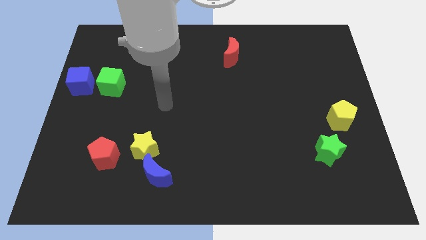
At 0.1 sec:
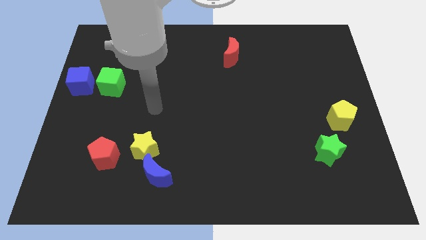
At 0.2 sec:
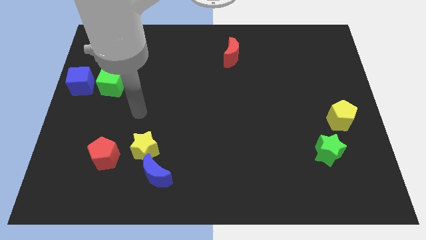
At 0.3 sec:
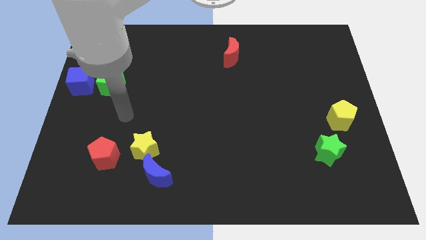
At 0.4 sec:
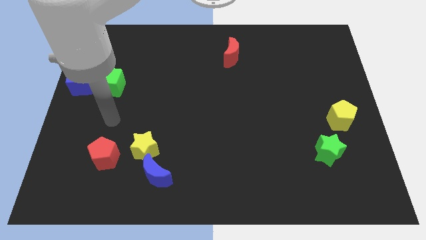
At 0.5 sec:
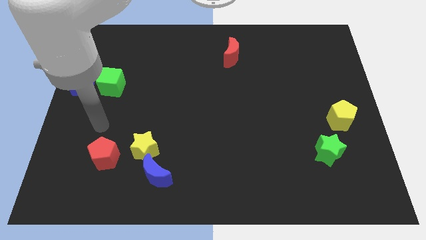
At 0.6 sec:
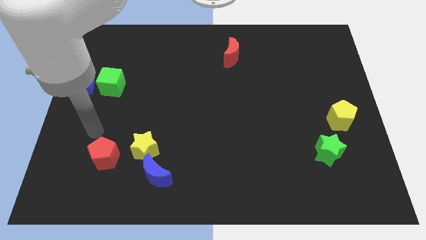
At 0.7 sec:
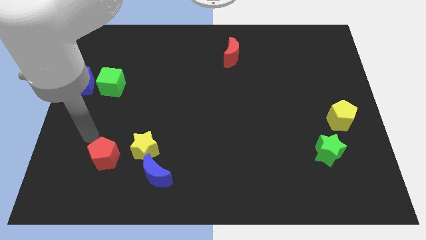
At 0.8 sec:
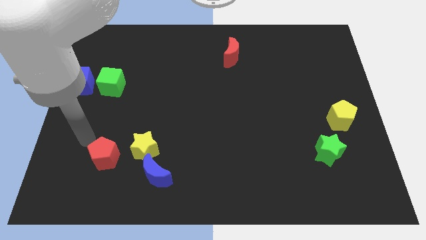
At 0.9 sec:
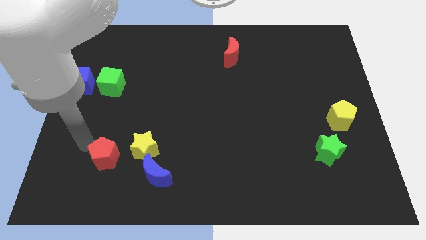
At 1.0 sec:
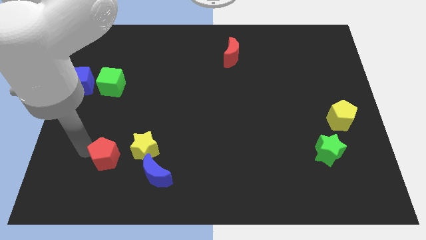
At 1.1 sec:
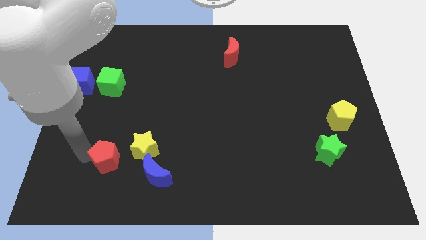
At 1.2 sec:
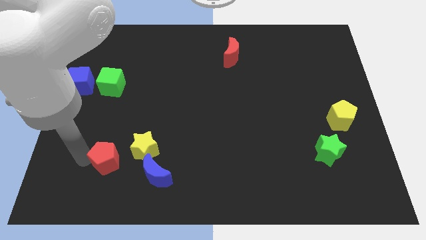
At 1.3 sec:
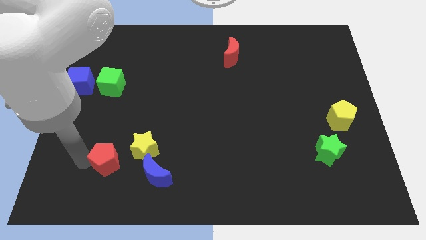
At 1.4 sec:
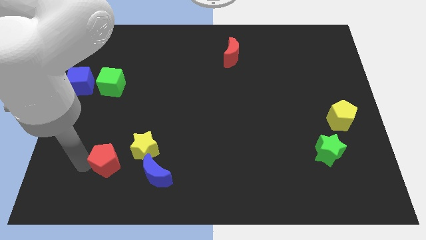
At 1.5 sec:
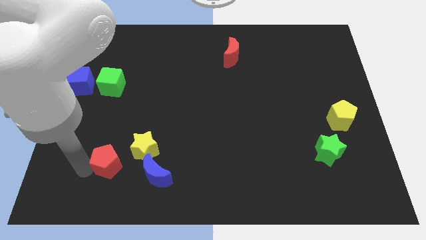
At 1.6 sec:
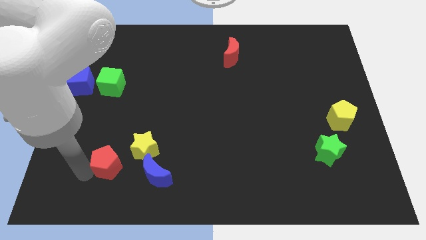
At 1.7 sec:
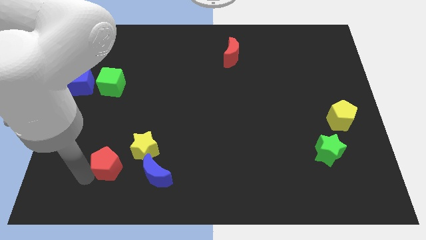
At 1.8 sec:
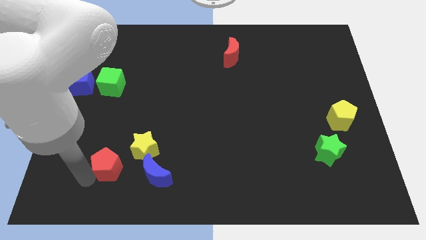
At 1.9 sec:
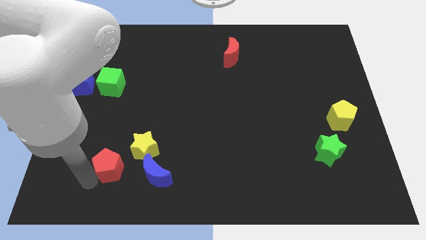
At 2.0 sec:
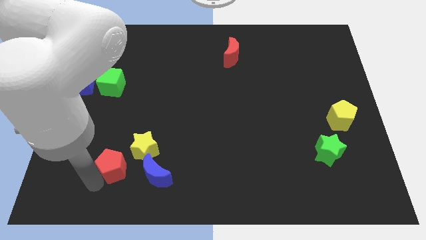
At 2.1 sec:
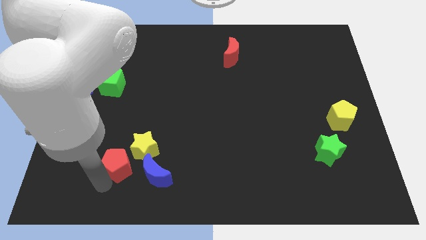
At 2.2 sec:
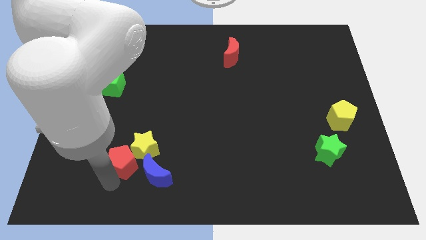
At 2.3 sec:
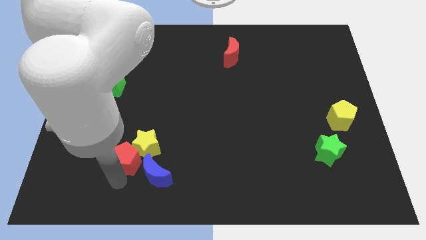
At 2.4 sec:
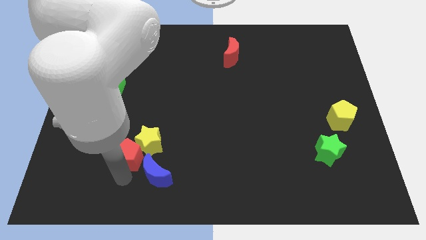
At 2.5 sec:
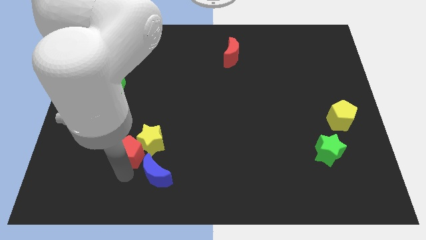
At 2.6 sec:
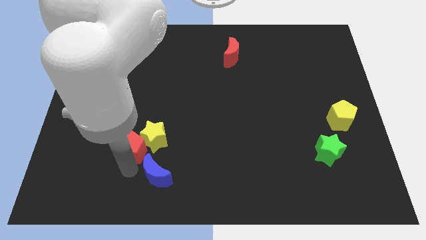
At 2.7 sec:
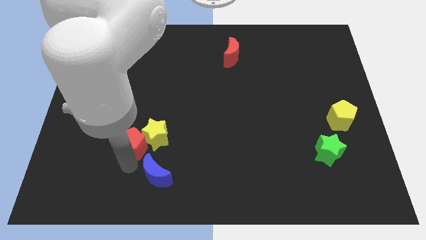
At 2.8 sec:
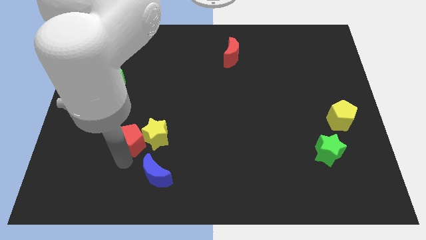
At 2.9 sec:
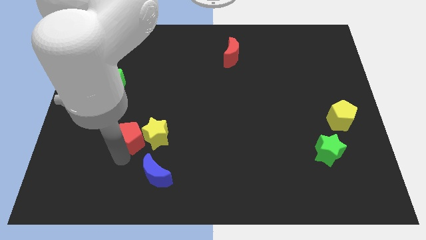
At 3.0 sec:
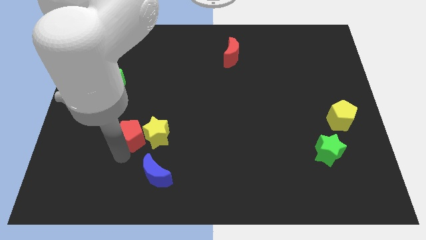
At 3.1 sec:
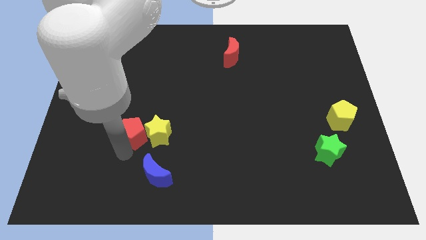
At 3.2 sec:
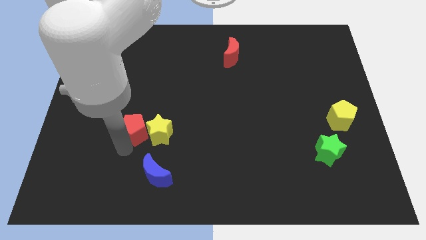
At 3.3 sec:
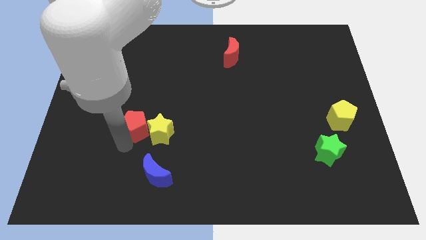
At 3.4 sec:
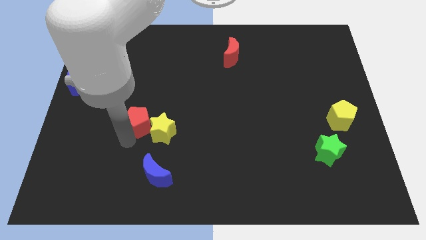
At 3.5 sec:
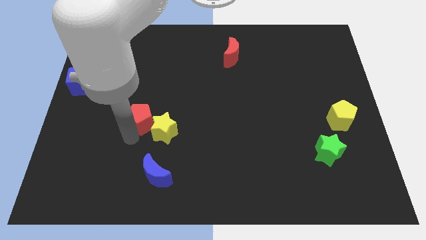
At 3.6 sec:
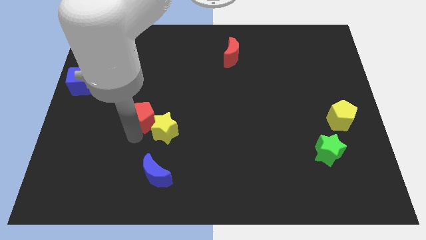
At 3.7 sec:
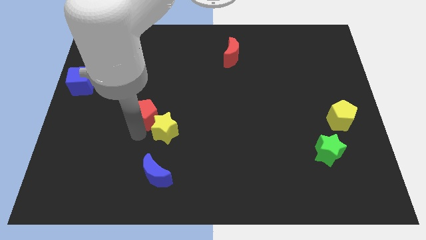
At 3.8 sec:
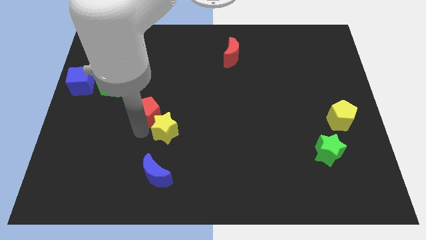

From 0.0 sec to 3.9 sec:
push the red pentagon into the yellow star

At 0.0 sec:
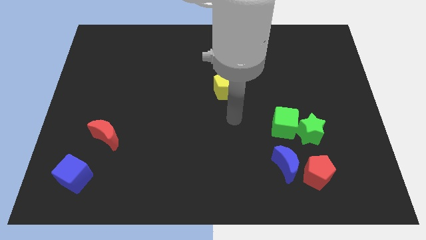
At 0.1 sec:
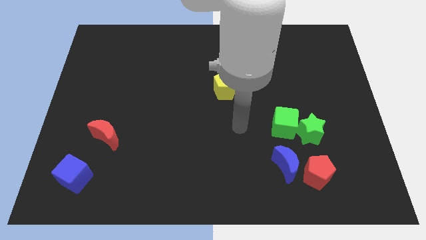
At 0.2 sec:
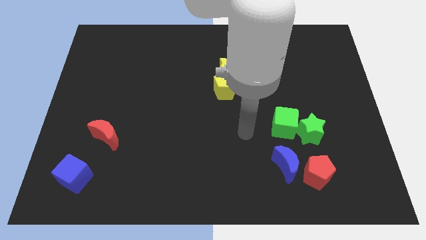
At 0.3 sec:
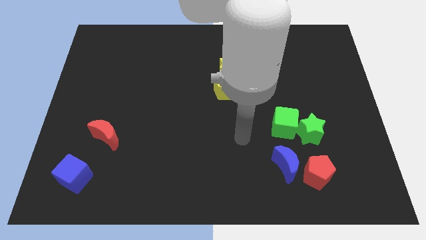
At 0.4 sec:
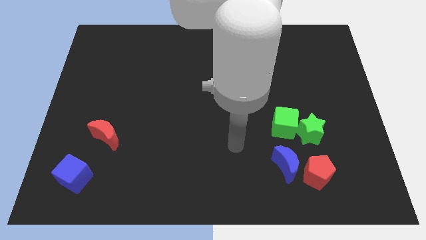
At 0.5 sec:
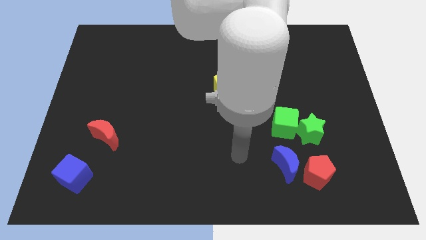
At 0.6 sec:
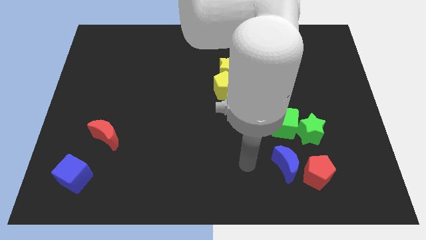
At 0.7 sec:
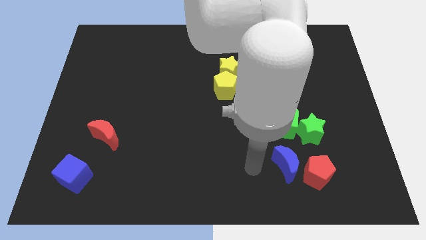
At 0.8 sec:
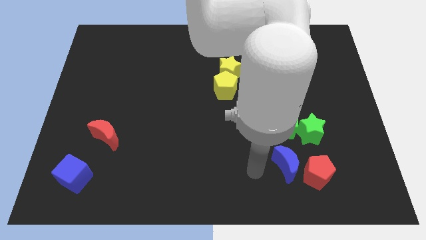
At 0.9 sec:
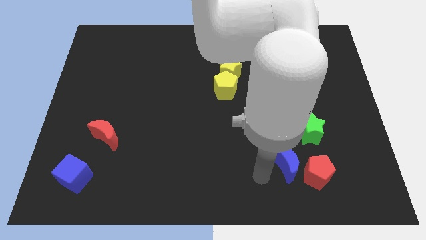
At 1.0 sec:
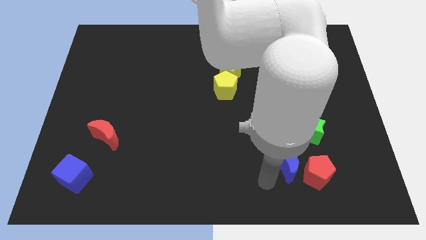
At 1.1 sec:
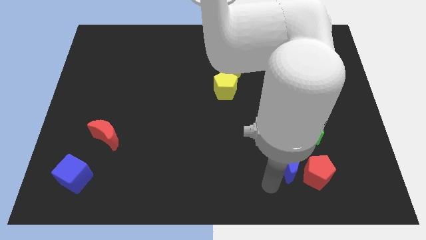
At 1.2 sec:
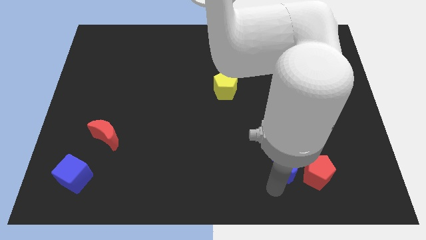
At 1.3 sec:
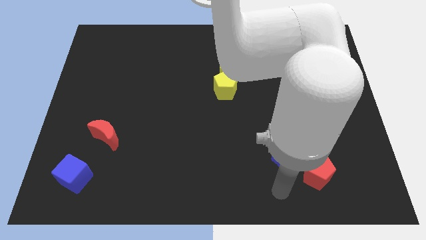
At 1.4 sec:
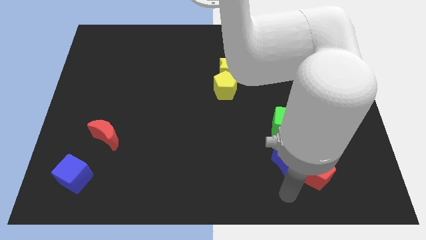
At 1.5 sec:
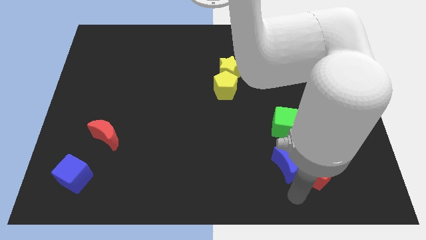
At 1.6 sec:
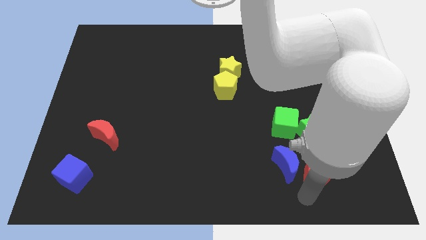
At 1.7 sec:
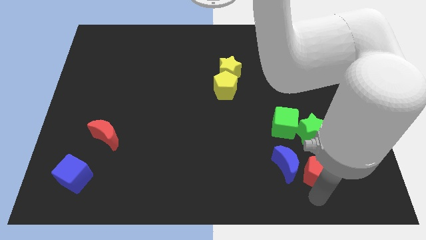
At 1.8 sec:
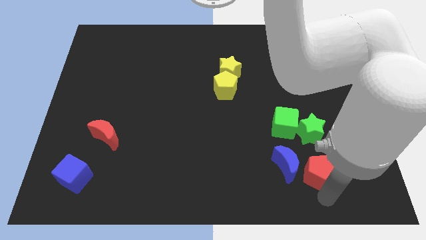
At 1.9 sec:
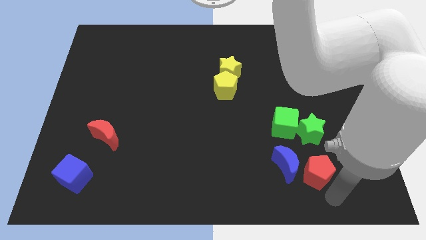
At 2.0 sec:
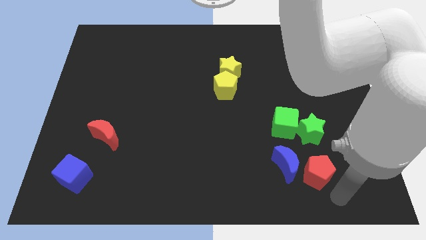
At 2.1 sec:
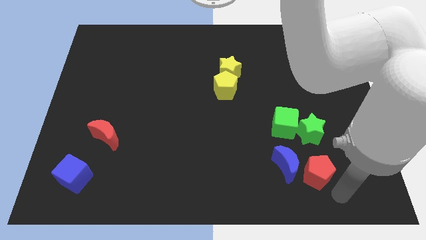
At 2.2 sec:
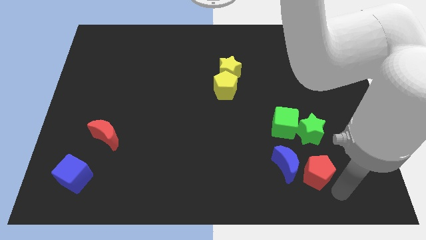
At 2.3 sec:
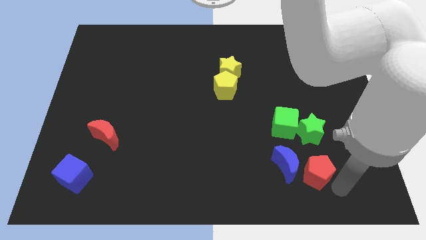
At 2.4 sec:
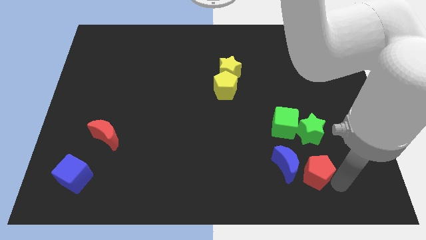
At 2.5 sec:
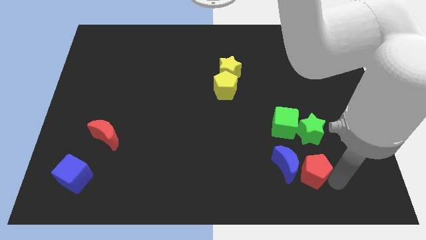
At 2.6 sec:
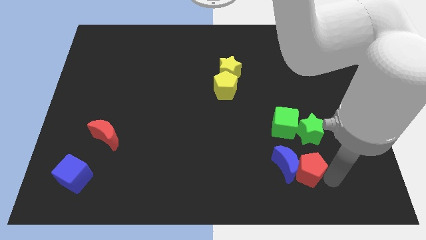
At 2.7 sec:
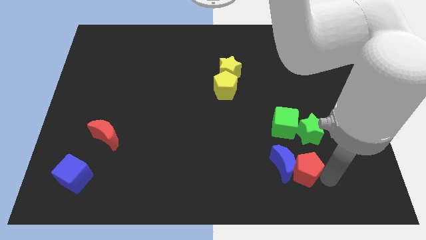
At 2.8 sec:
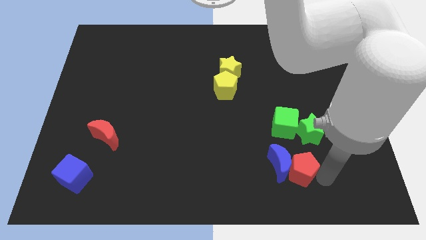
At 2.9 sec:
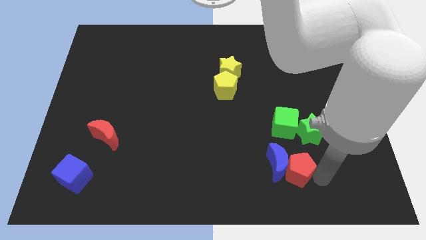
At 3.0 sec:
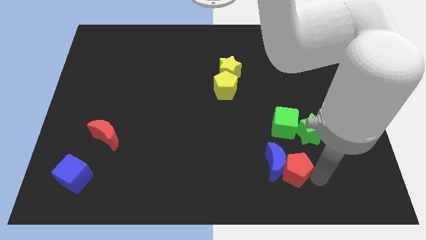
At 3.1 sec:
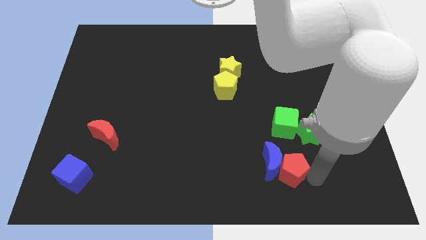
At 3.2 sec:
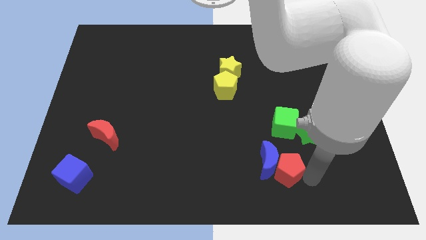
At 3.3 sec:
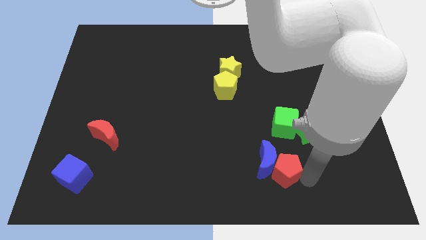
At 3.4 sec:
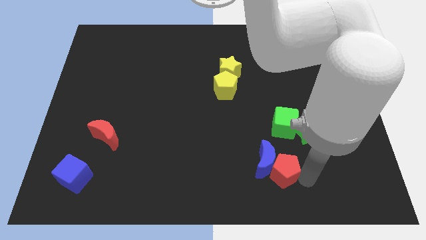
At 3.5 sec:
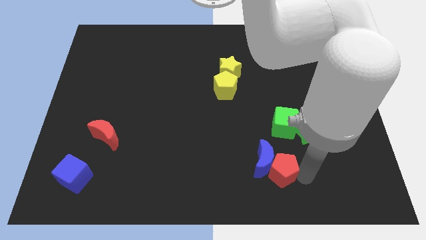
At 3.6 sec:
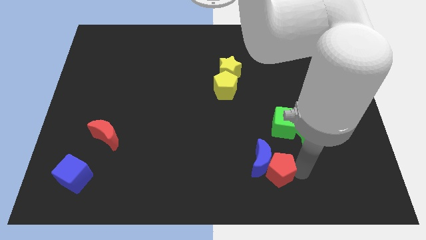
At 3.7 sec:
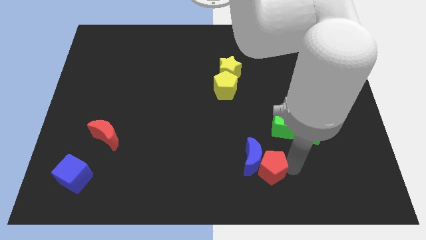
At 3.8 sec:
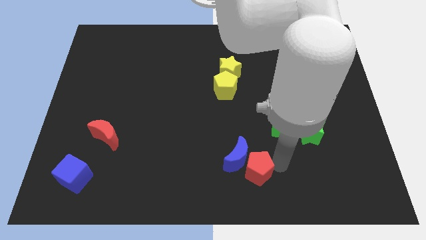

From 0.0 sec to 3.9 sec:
push blue moon along with red pentagon towards the center

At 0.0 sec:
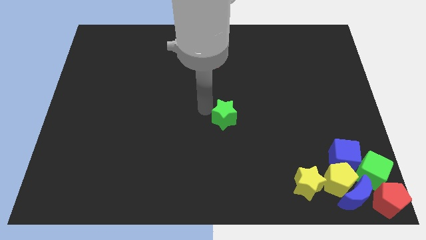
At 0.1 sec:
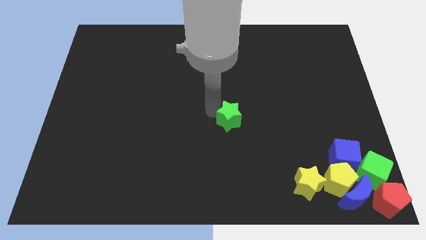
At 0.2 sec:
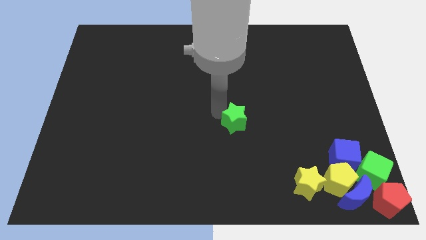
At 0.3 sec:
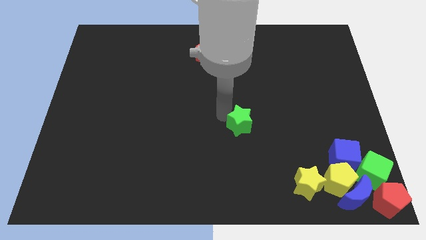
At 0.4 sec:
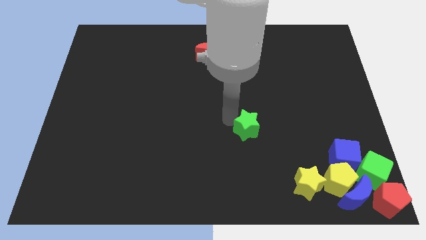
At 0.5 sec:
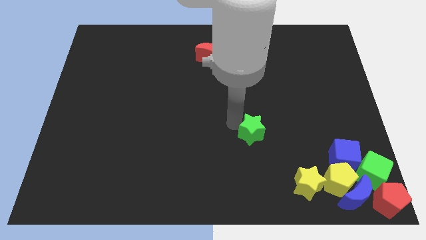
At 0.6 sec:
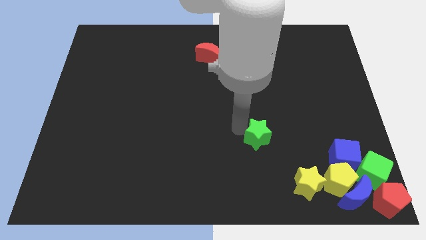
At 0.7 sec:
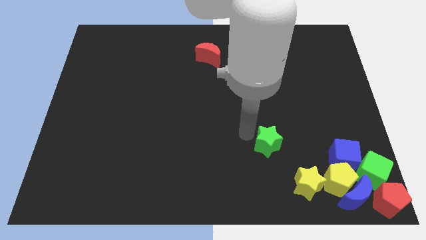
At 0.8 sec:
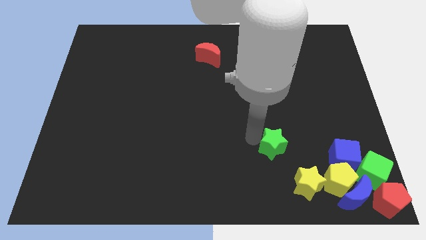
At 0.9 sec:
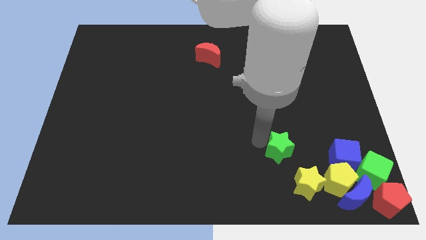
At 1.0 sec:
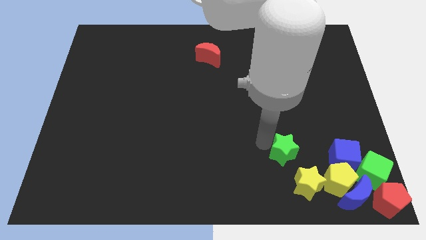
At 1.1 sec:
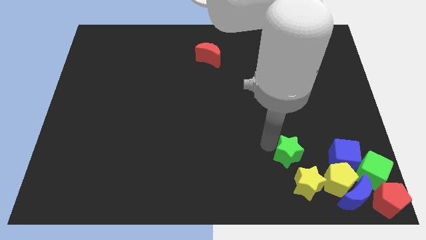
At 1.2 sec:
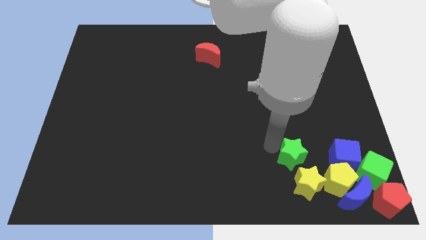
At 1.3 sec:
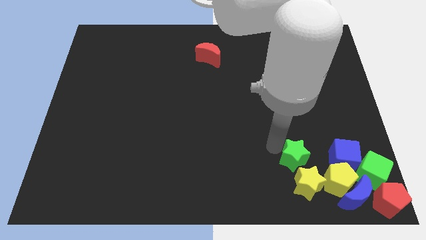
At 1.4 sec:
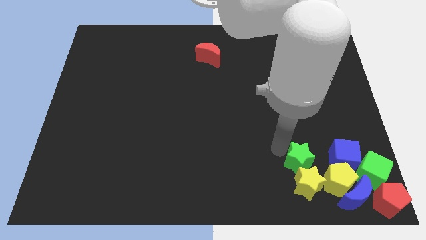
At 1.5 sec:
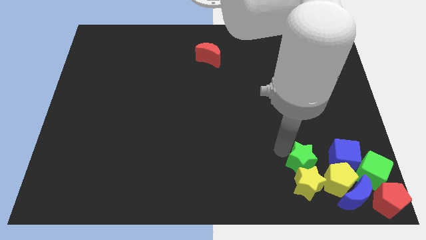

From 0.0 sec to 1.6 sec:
push the green star to the top of the yellow star
